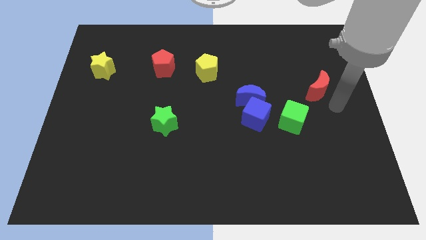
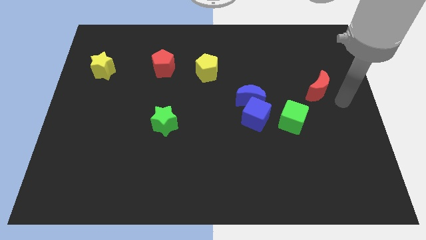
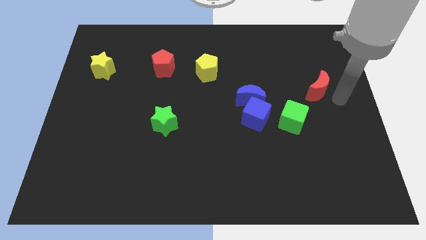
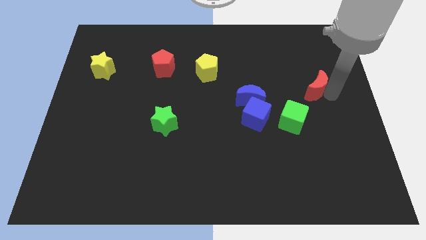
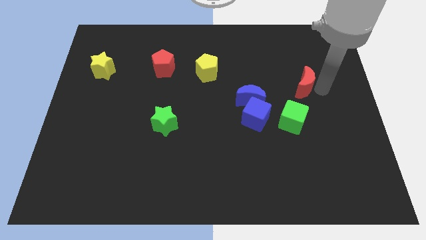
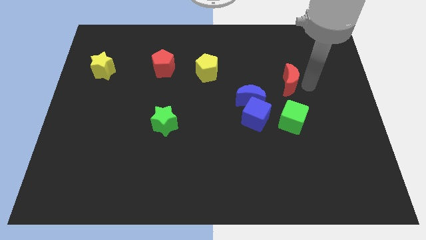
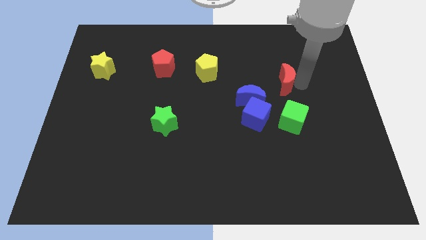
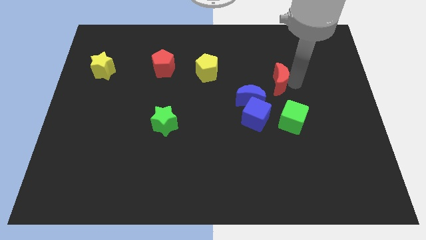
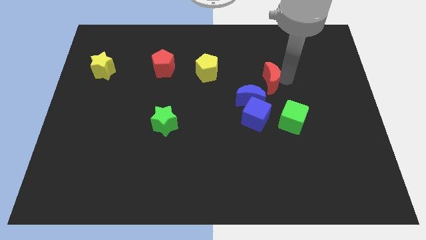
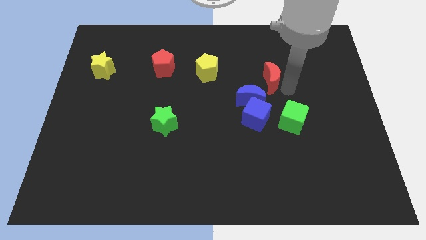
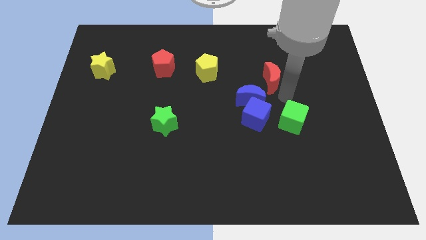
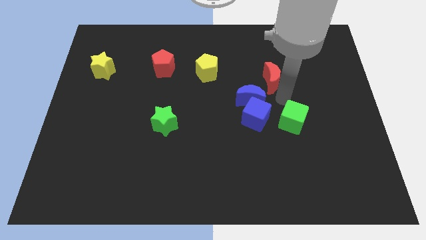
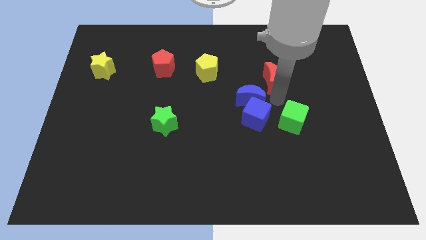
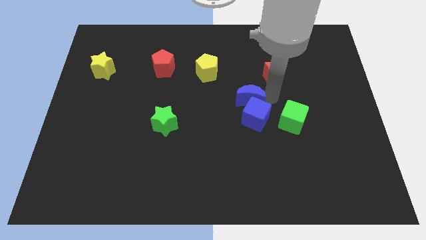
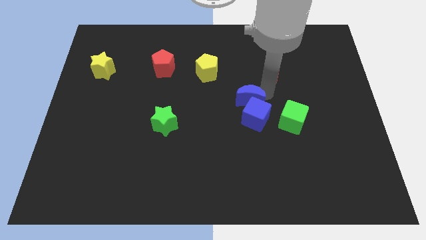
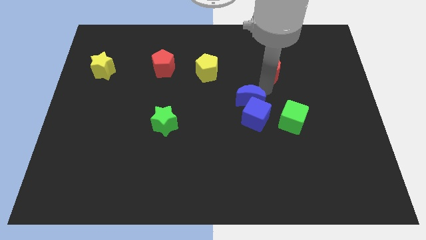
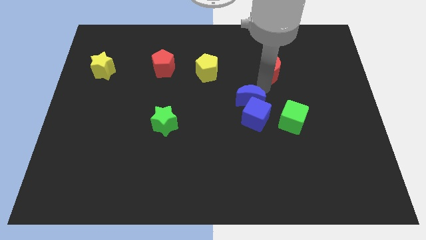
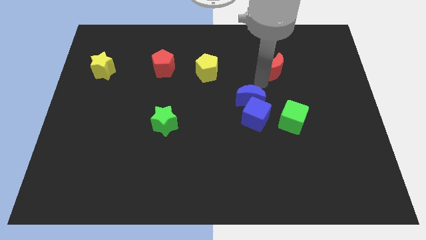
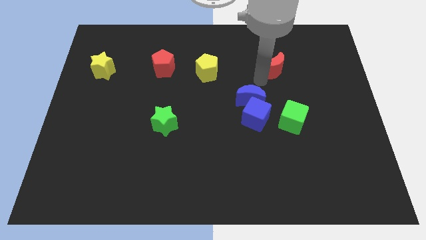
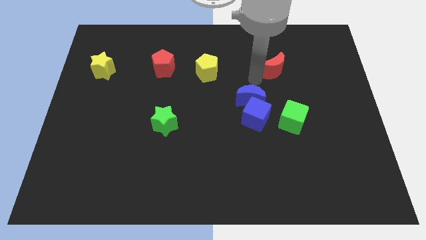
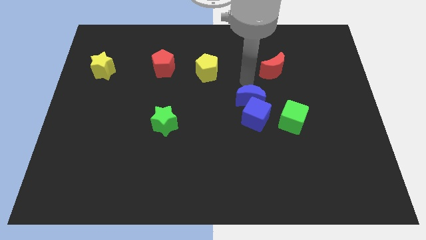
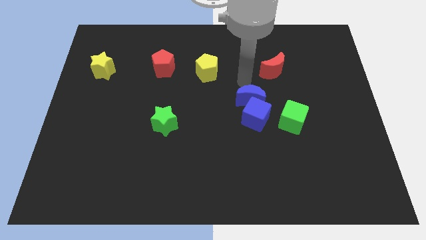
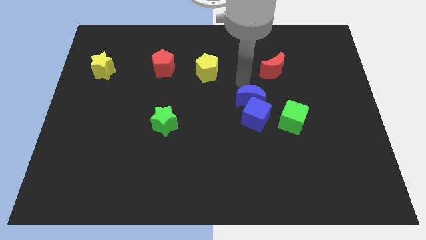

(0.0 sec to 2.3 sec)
push the red moon to the parallel right of the yellow pentagon

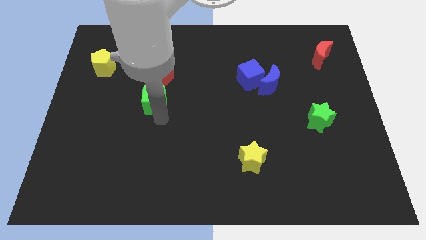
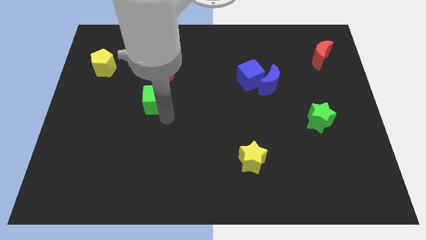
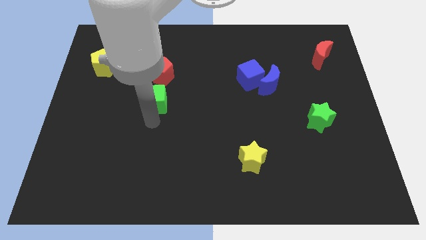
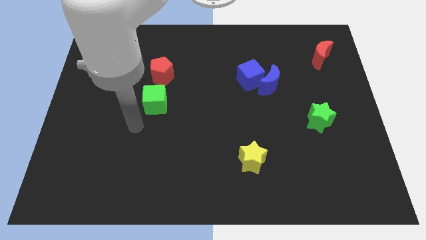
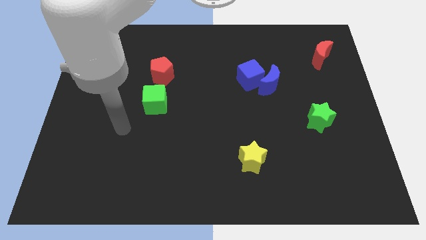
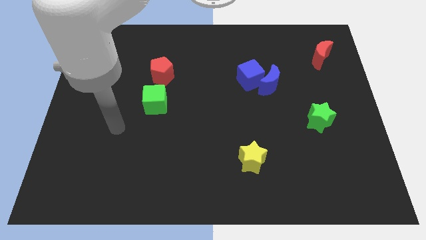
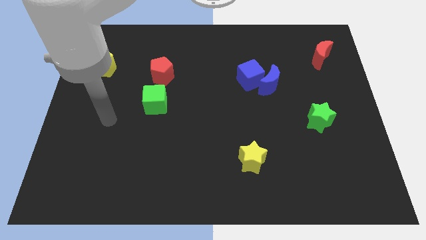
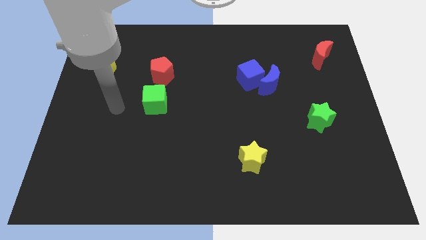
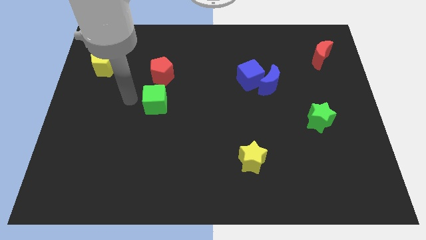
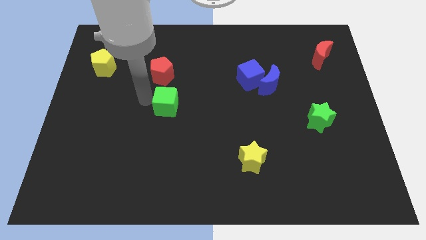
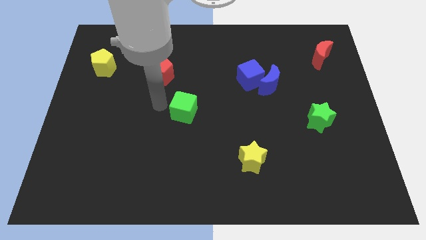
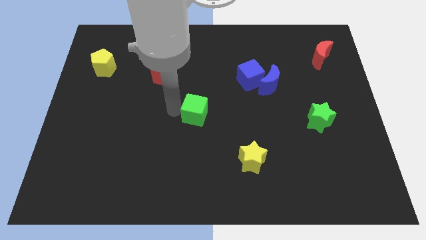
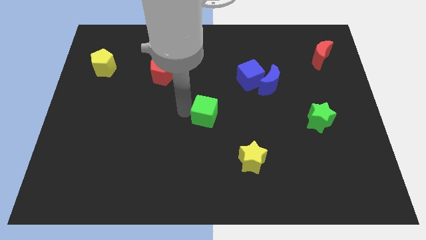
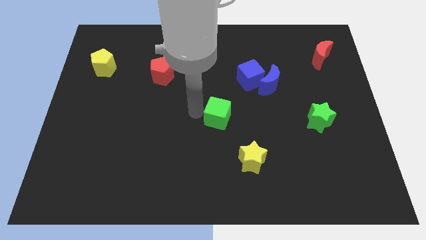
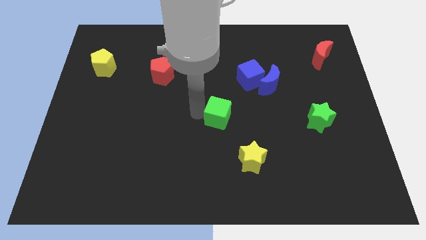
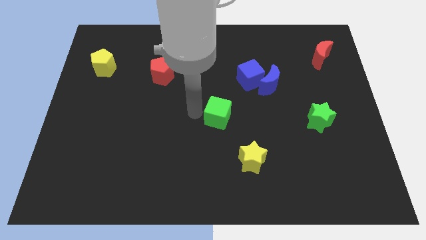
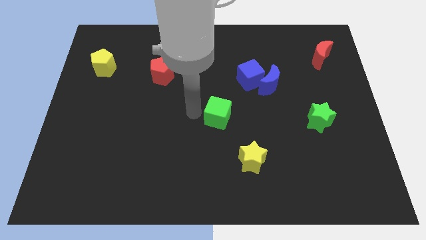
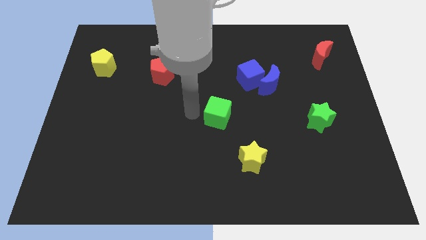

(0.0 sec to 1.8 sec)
place the green cube at the center of the board

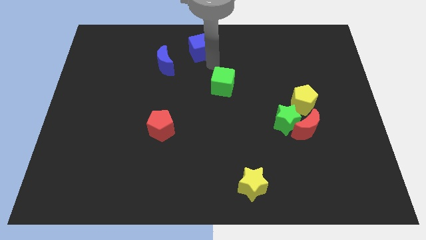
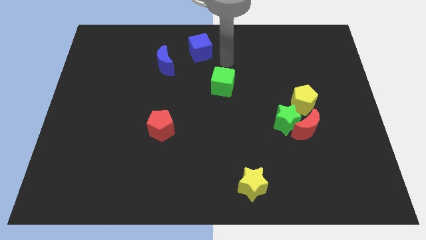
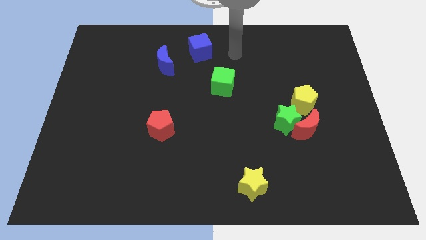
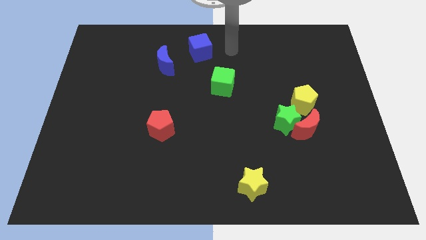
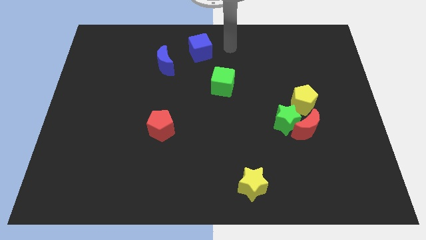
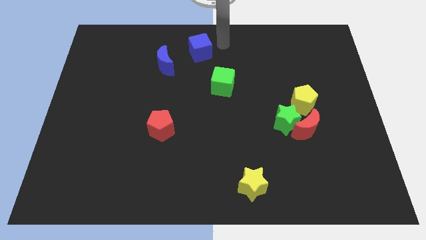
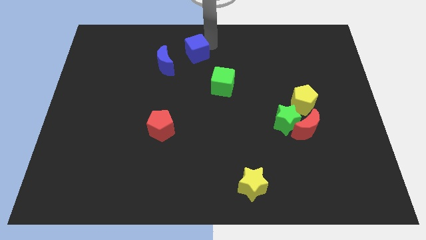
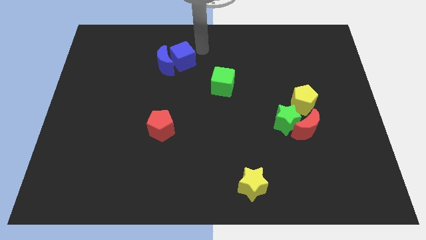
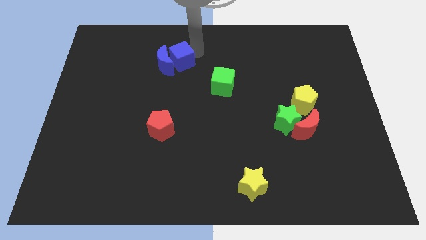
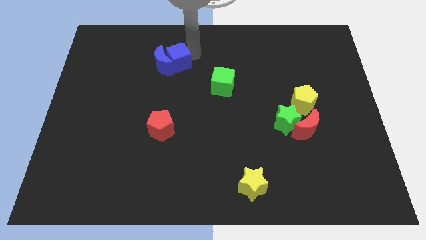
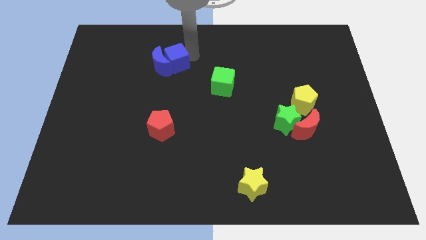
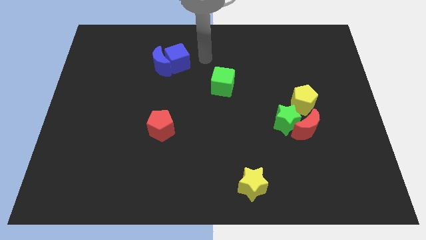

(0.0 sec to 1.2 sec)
place the blue cube at the right side of the blue crescent

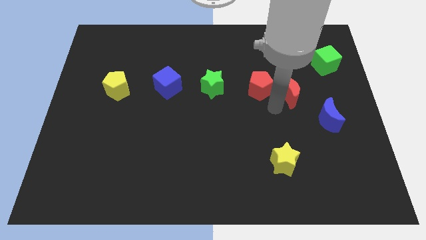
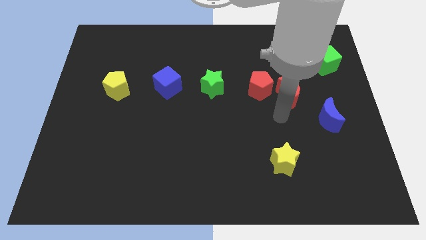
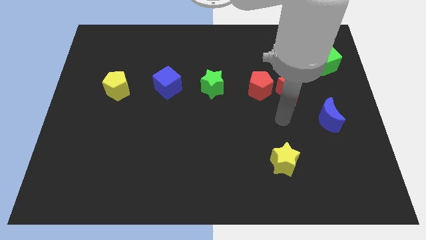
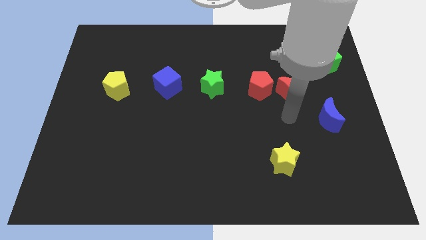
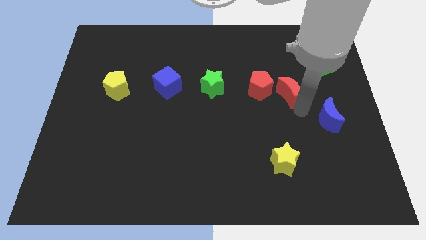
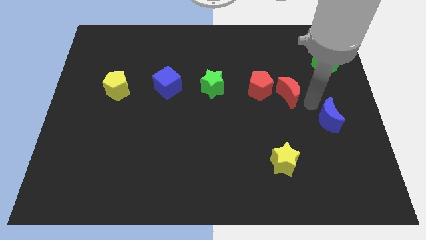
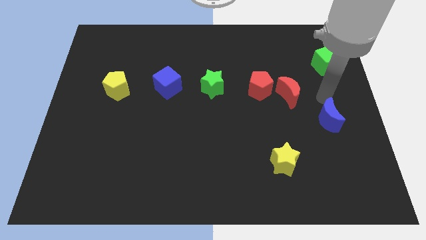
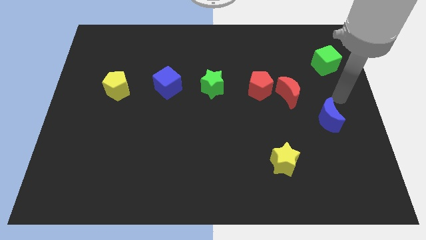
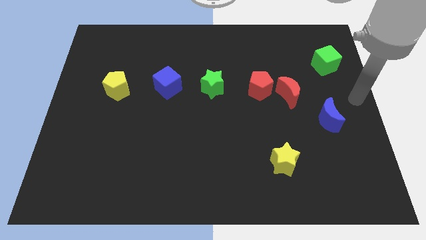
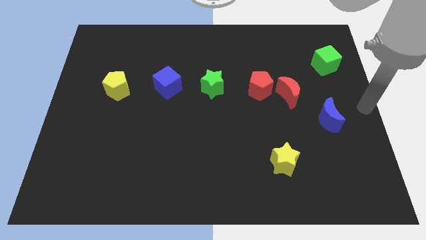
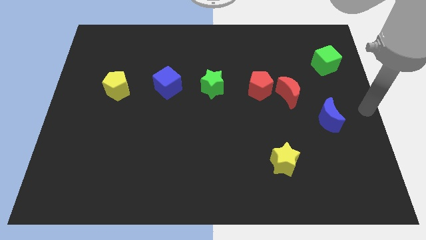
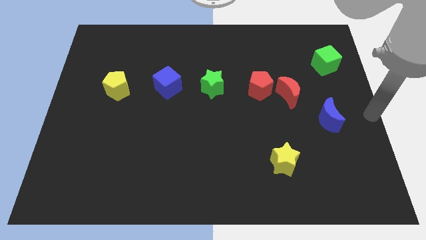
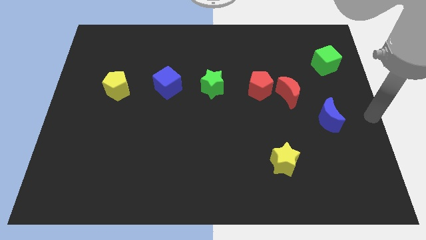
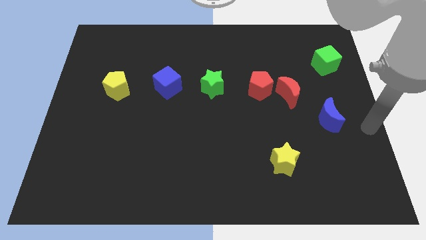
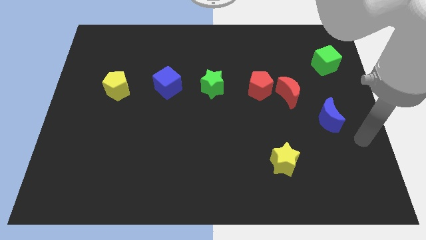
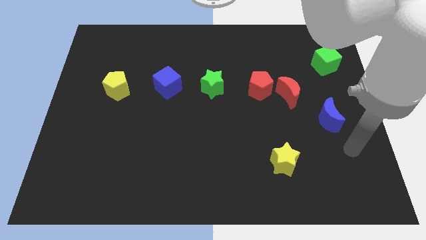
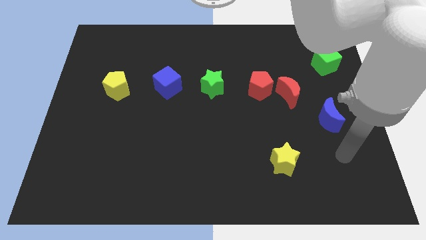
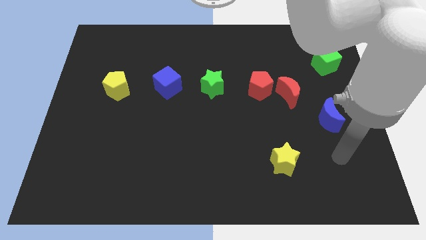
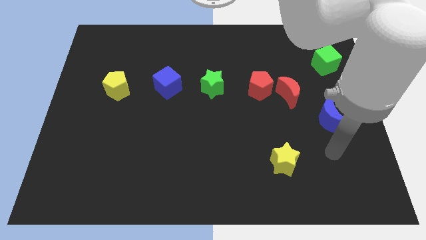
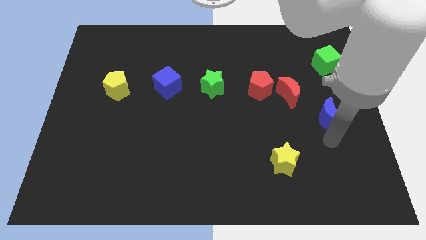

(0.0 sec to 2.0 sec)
point your arm below the blue crescent

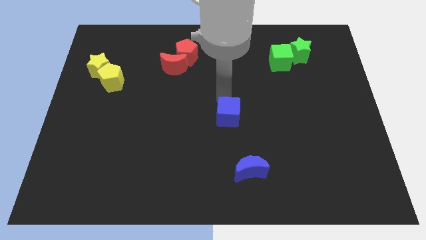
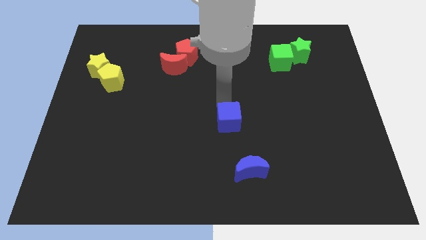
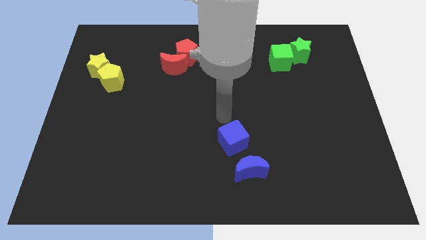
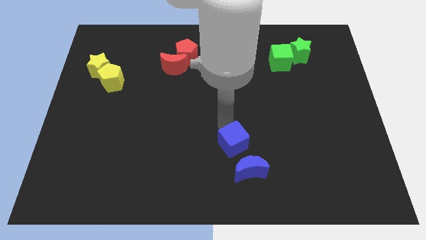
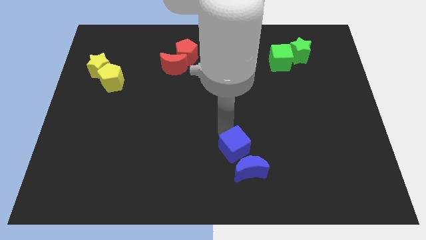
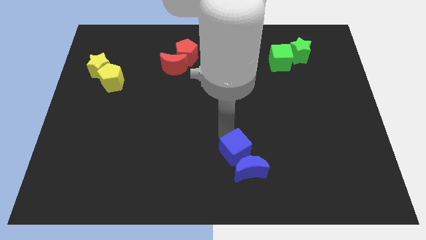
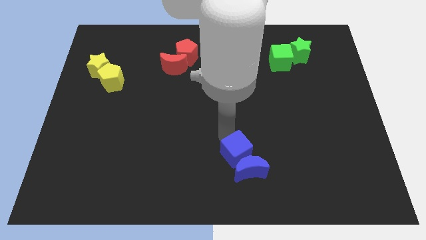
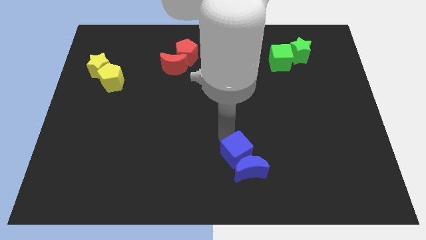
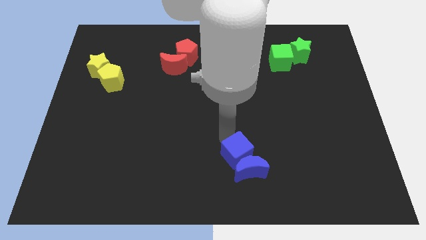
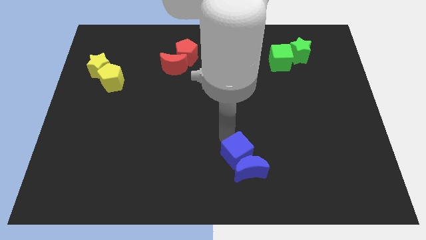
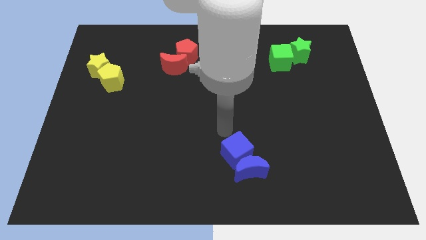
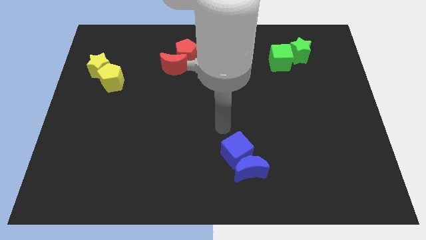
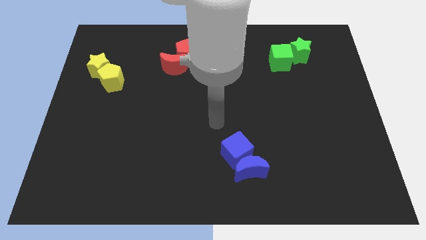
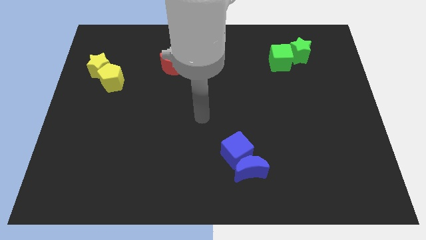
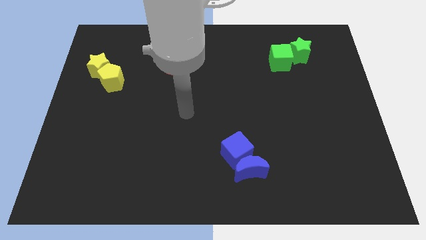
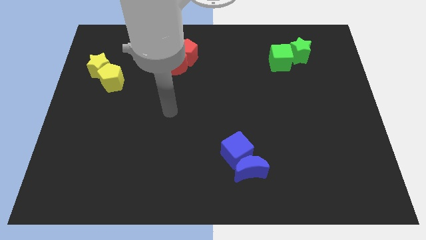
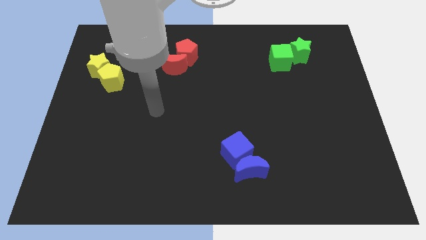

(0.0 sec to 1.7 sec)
move the blue cube above of the blue crescent
